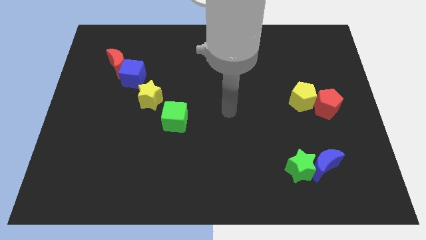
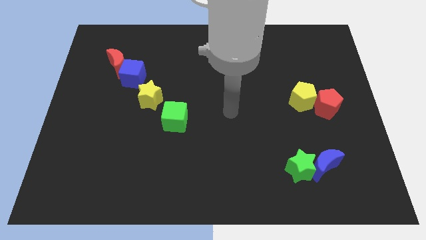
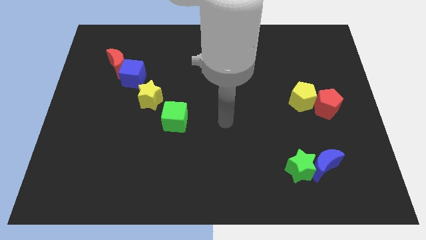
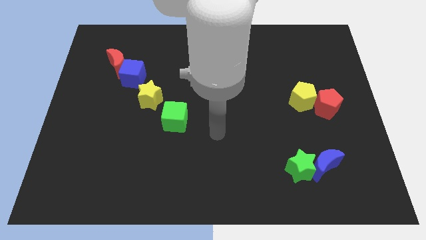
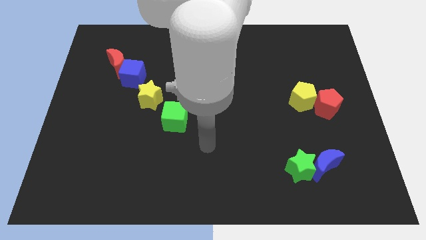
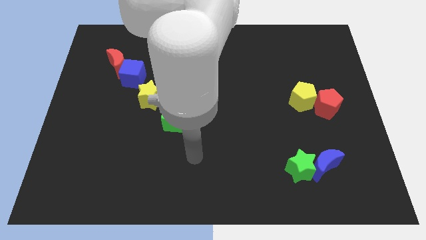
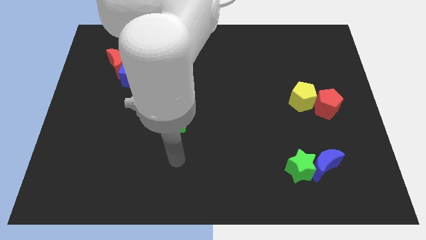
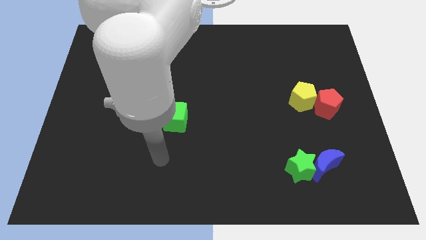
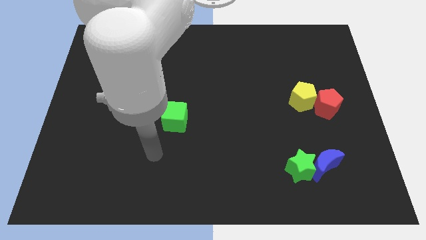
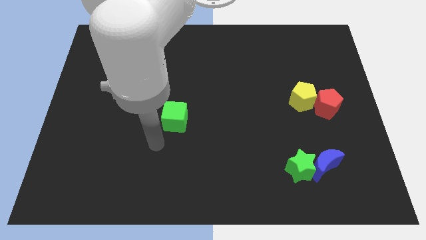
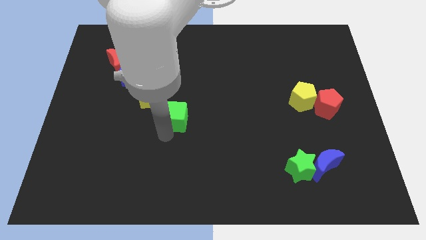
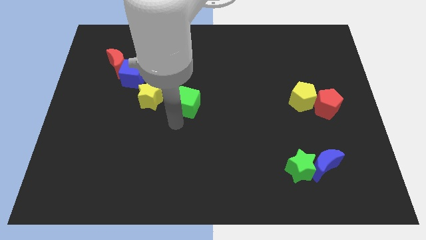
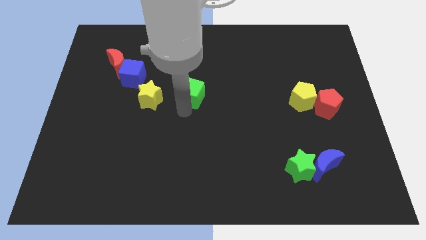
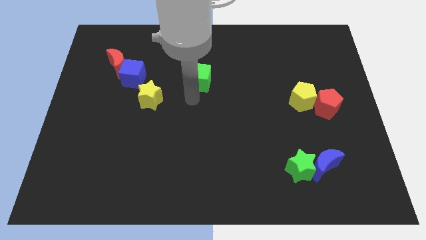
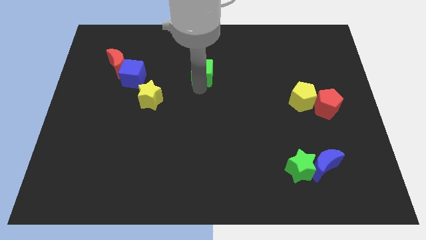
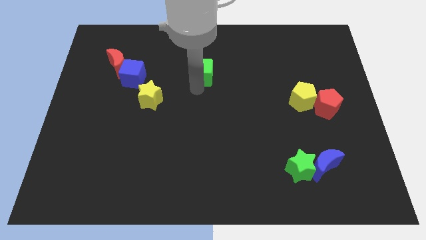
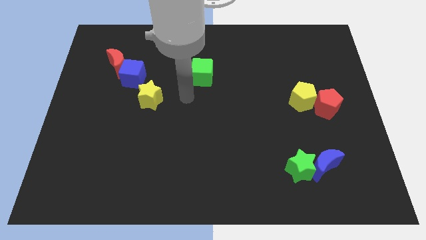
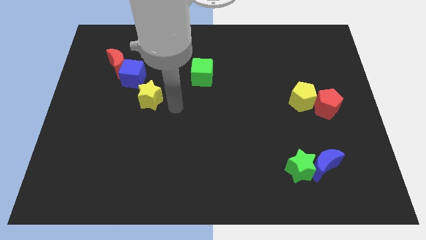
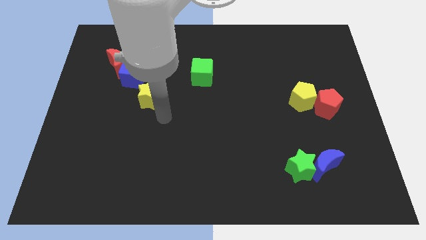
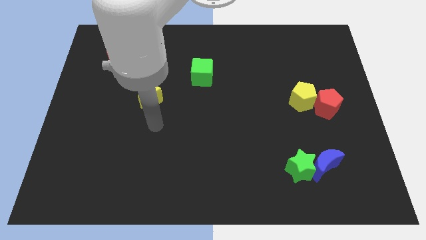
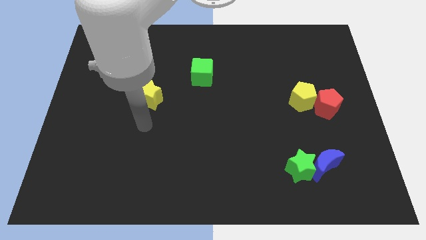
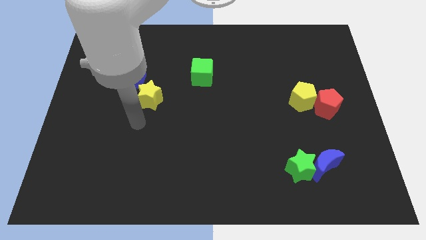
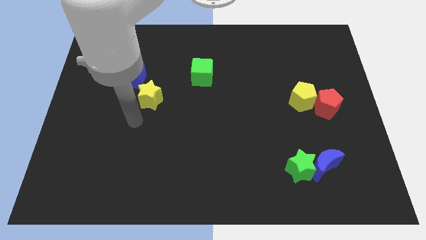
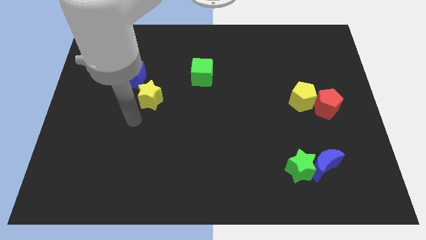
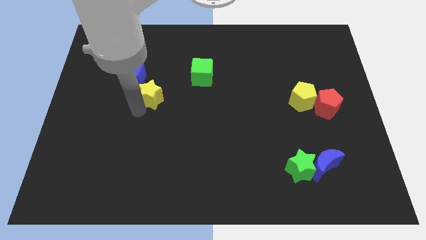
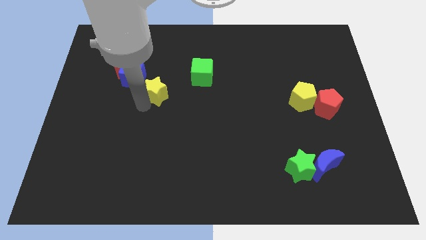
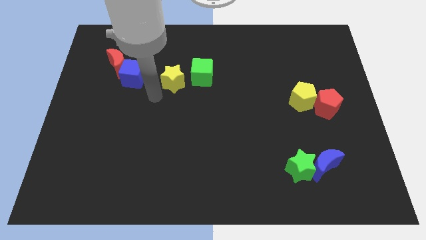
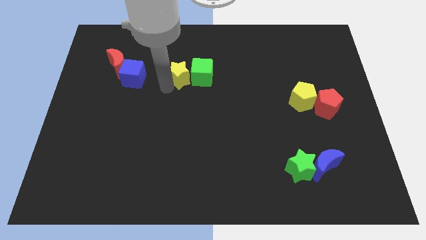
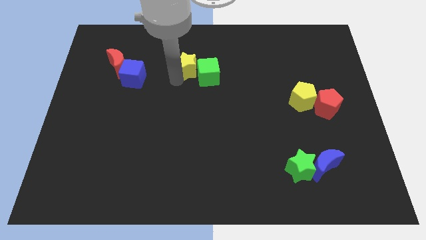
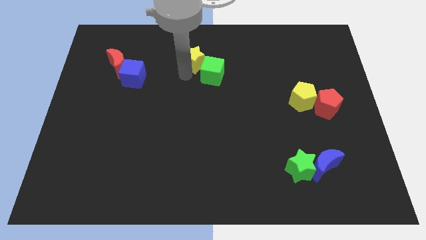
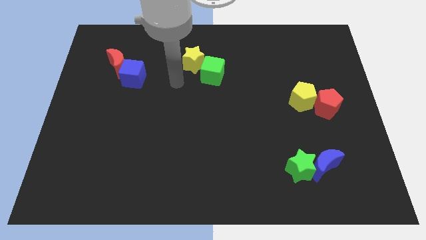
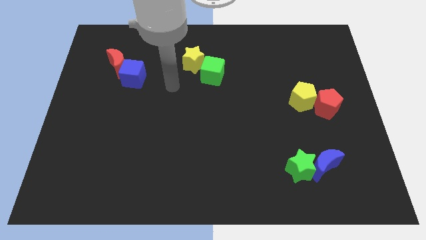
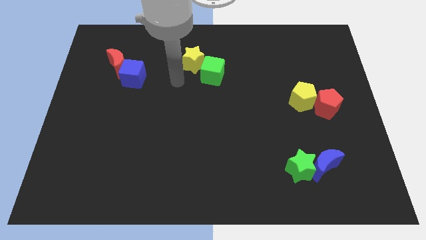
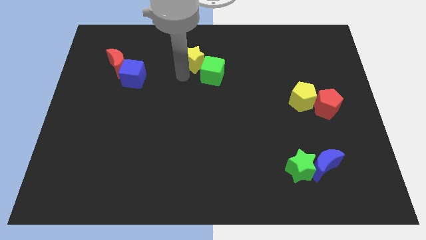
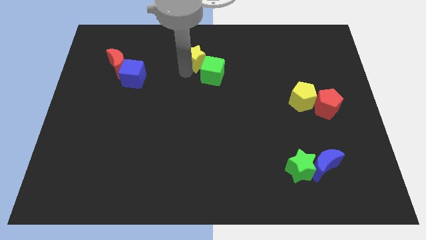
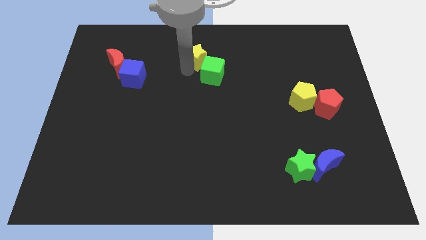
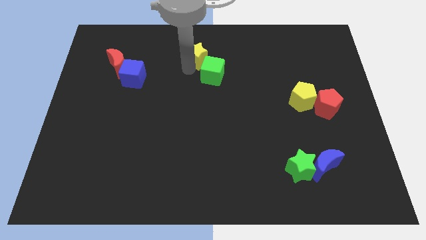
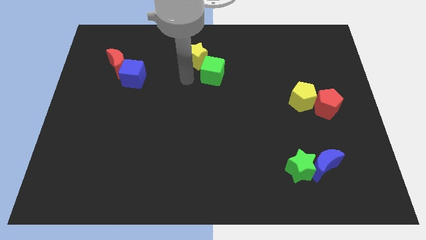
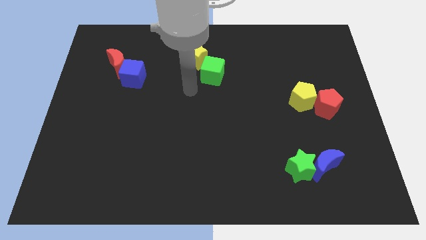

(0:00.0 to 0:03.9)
move the green cube and the yellow star to the top of the board

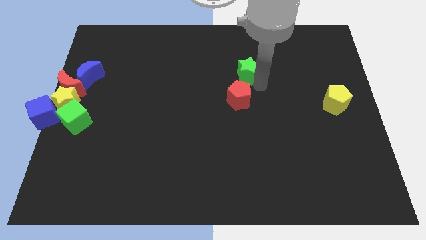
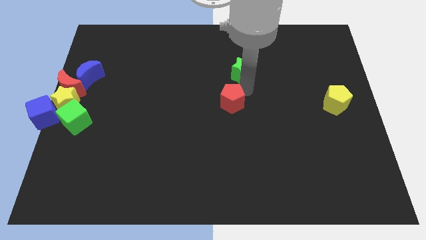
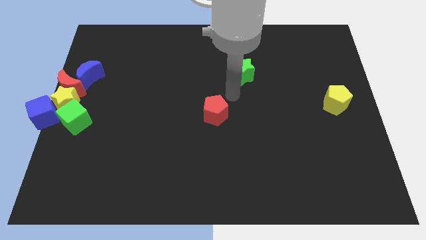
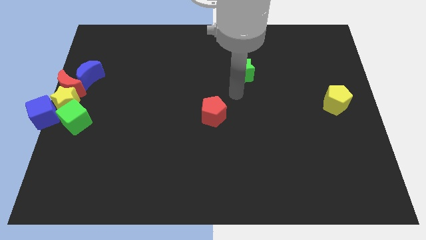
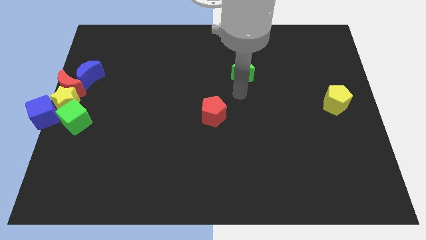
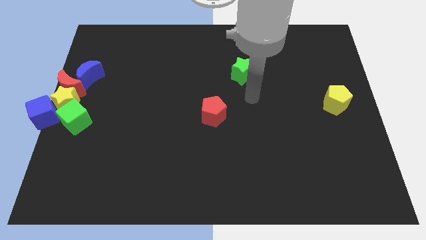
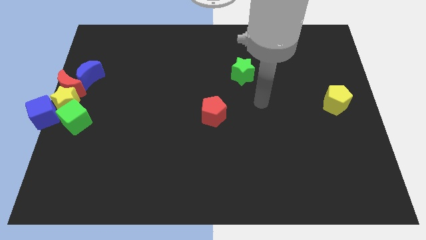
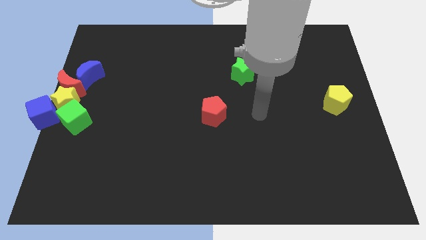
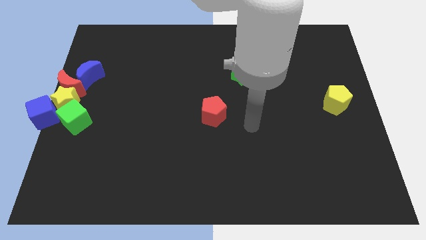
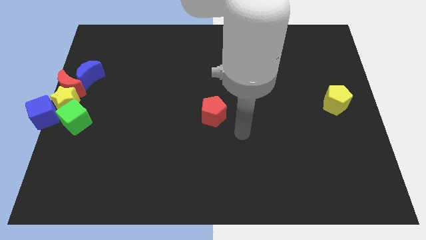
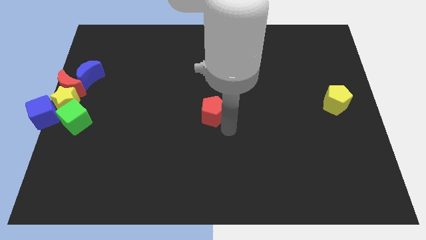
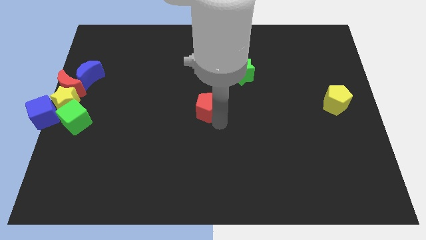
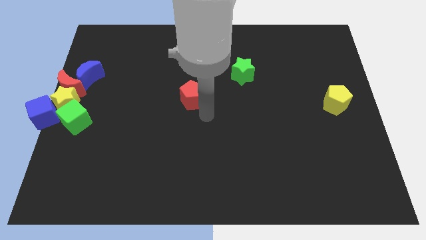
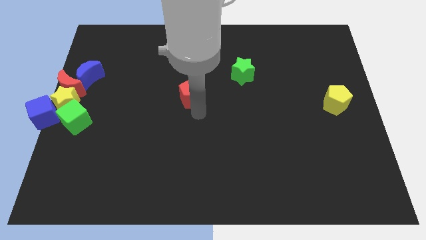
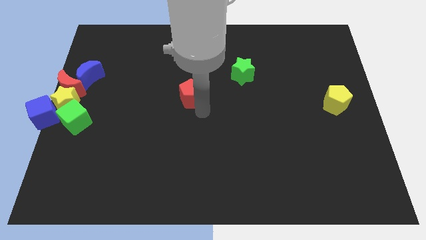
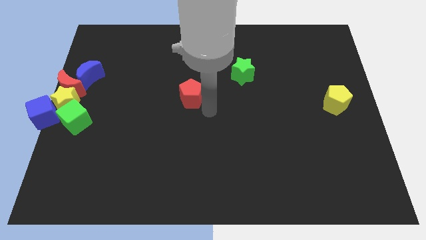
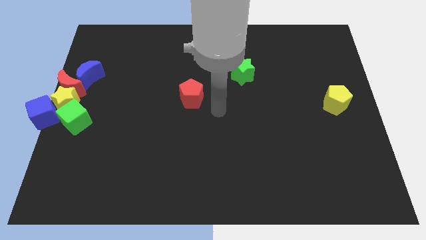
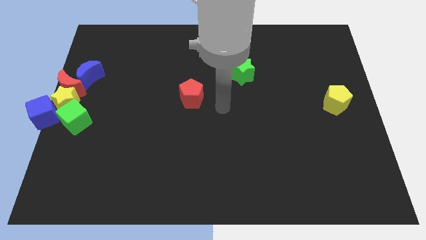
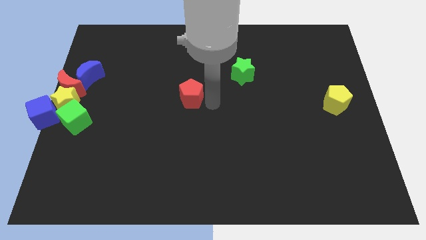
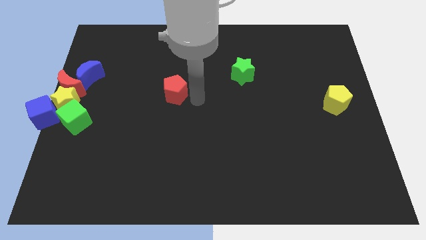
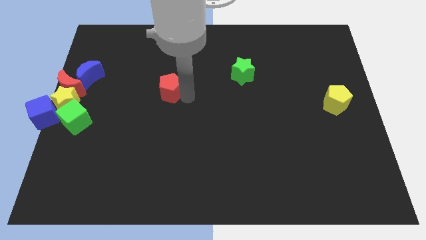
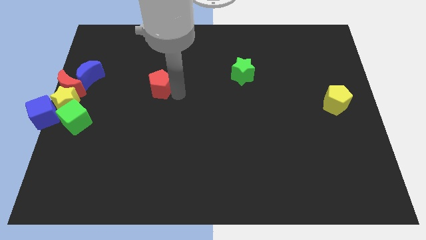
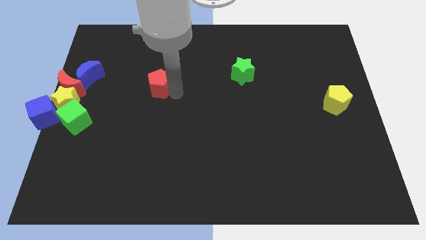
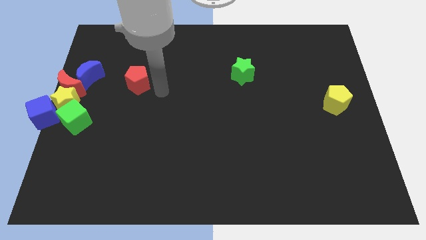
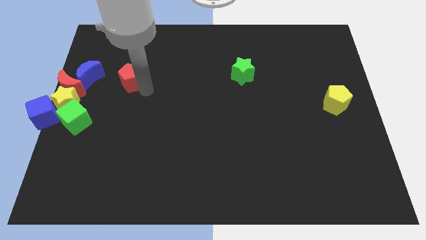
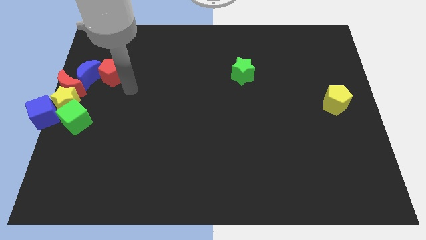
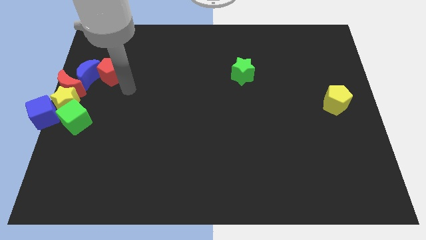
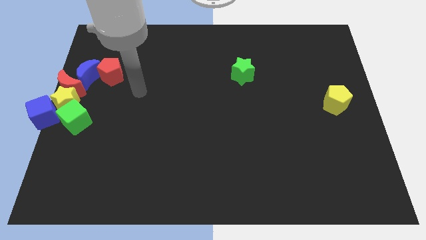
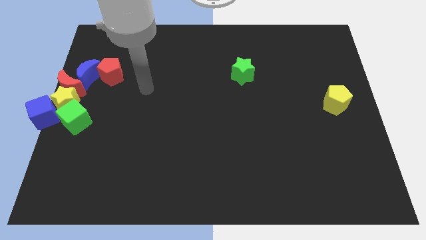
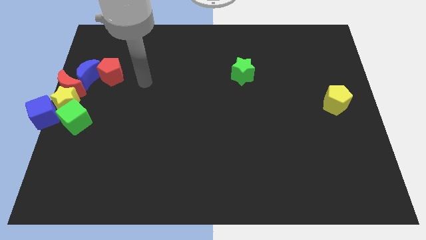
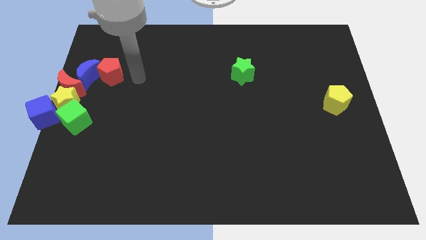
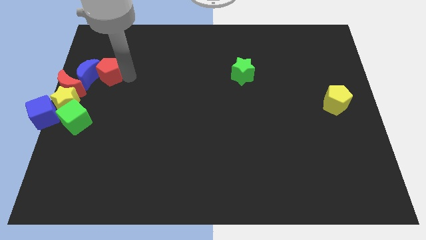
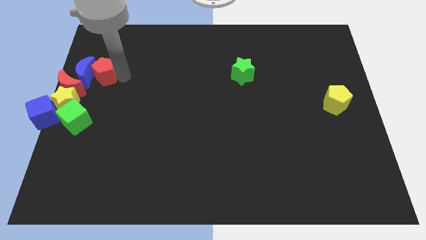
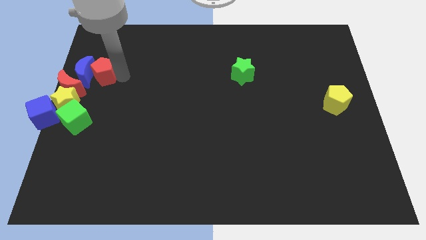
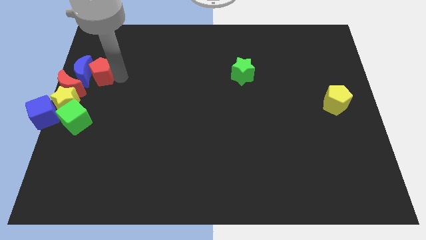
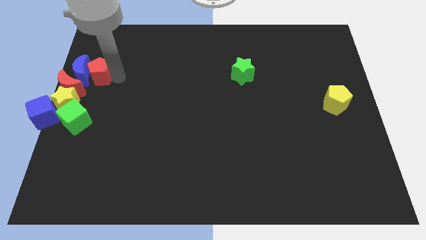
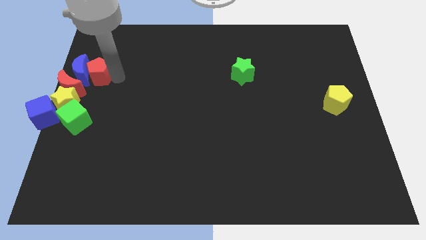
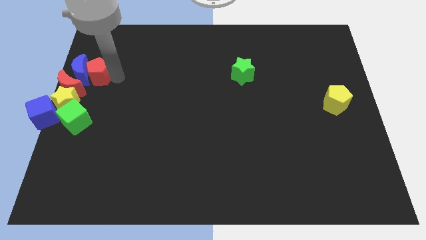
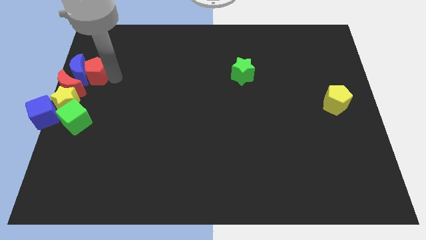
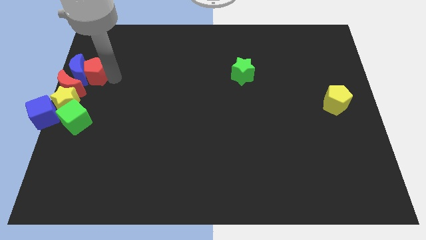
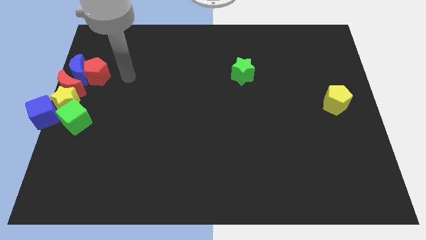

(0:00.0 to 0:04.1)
slide the red pentagon to the right side of the blue moon

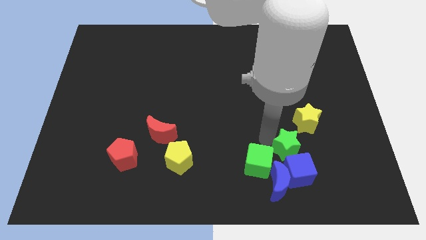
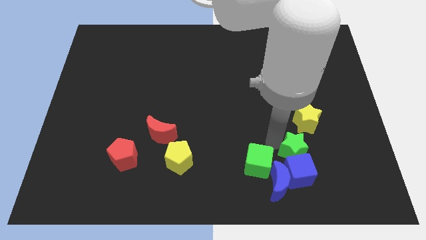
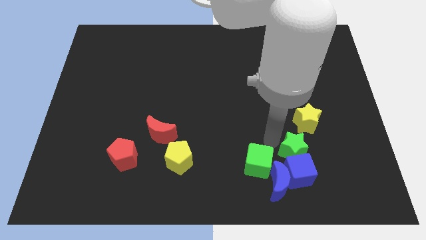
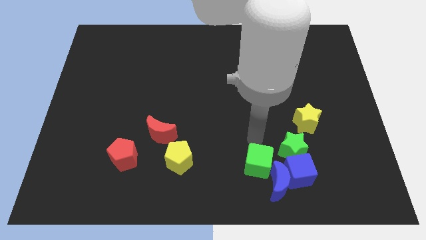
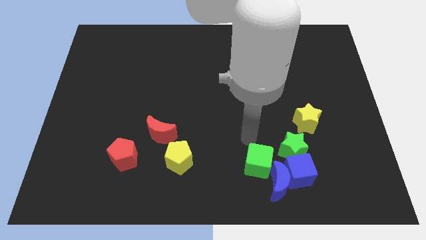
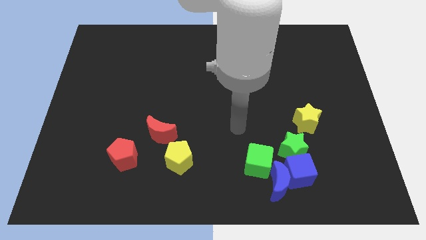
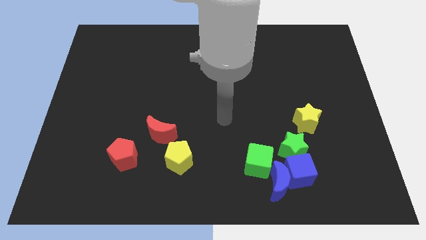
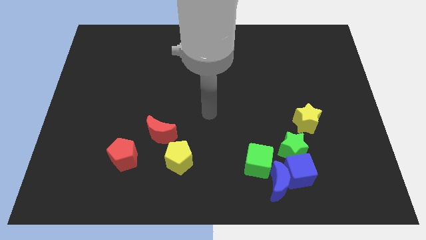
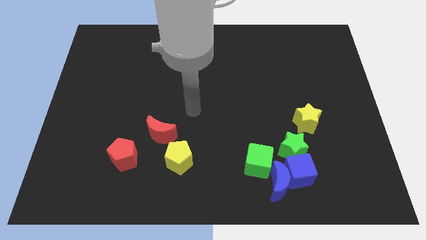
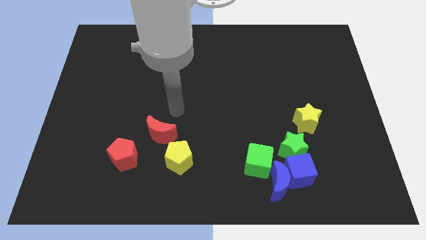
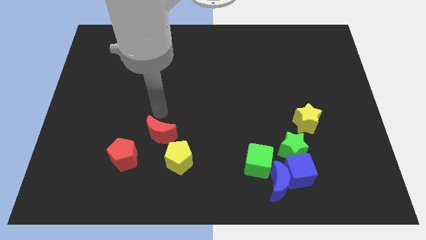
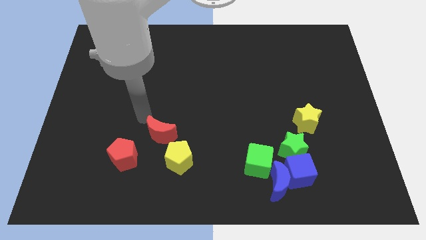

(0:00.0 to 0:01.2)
point your arm at the top of the red crescent
